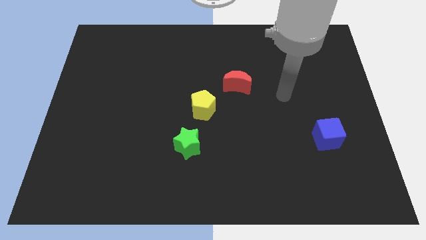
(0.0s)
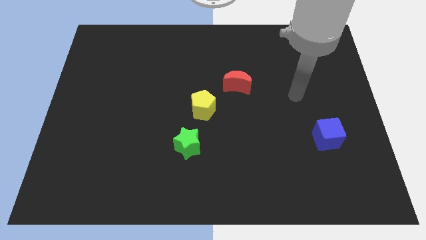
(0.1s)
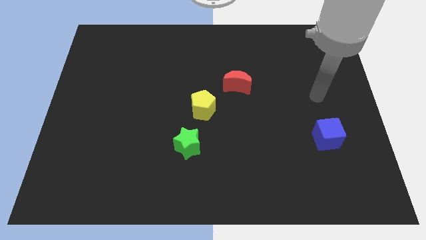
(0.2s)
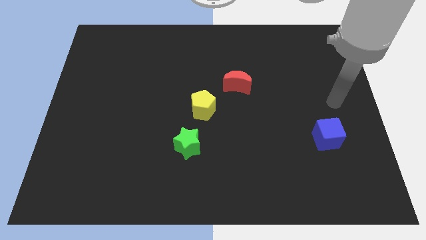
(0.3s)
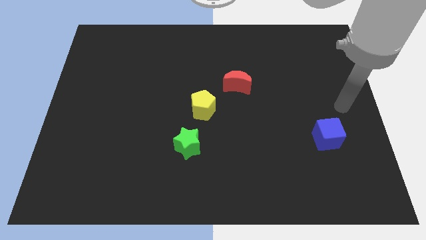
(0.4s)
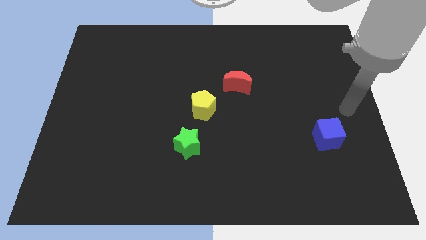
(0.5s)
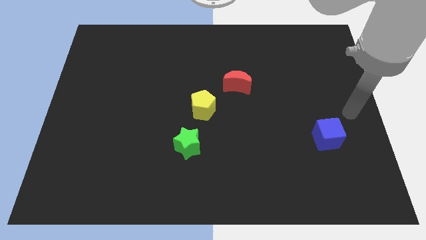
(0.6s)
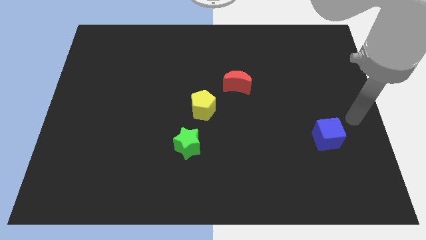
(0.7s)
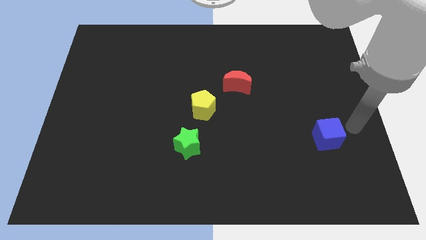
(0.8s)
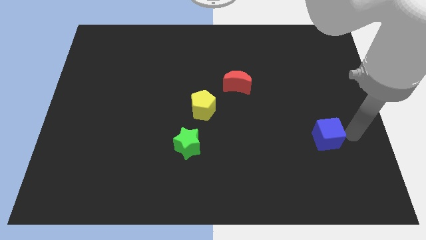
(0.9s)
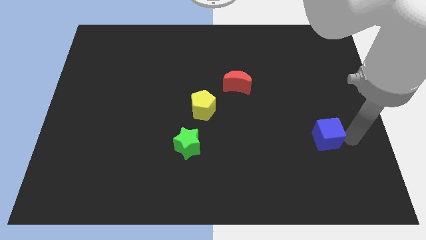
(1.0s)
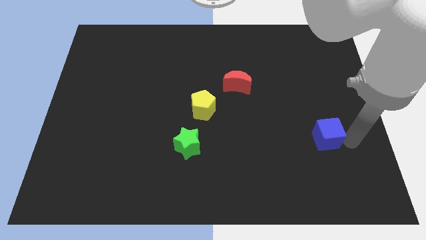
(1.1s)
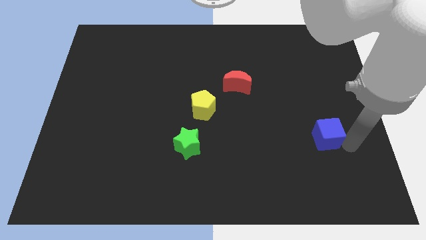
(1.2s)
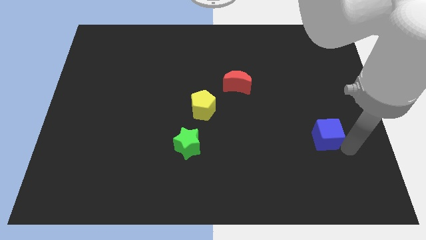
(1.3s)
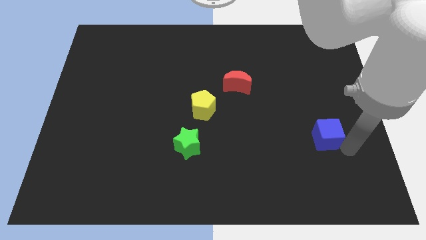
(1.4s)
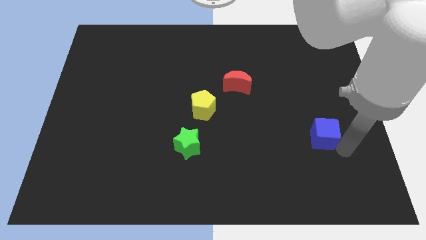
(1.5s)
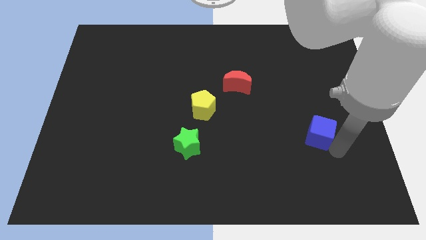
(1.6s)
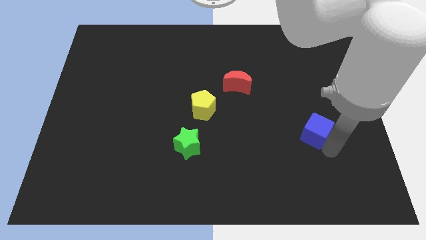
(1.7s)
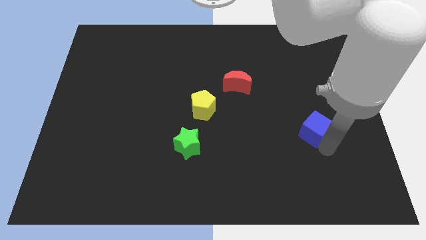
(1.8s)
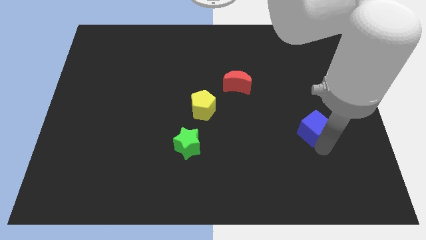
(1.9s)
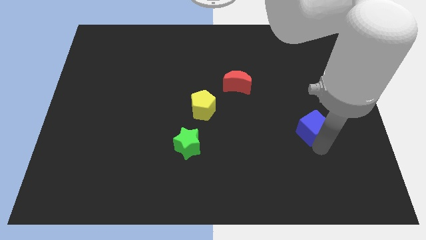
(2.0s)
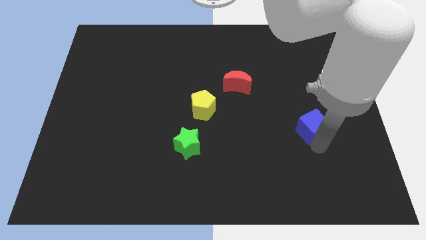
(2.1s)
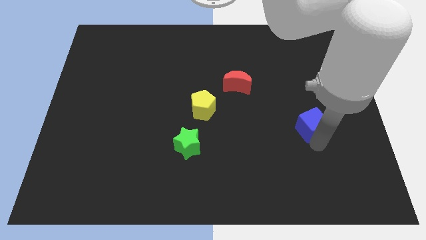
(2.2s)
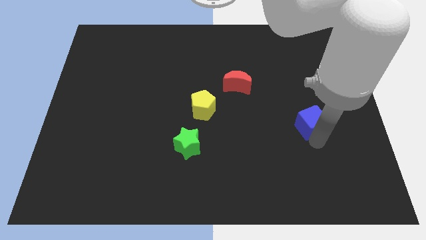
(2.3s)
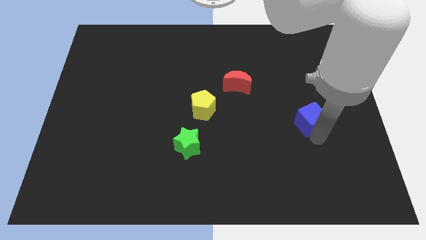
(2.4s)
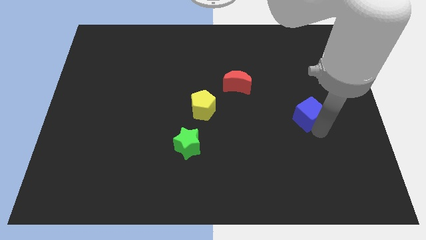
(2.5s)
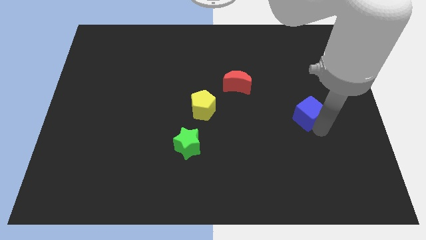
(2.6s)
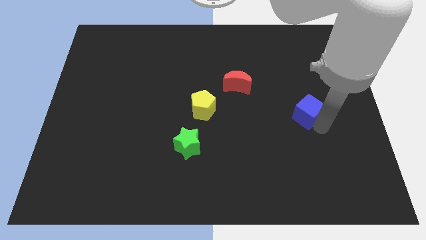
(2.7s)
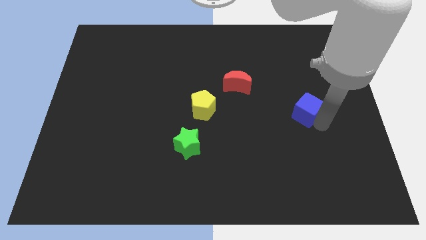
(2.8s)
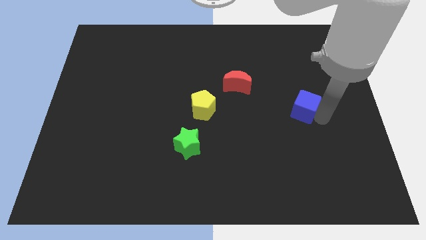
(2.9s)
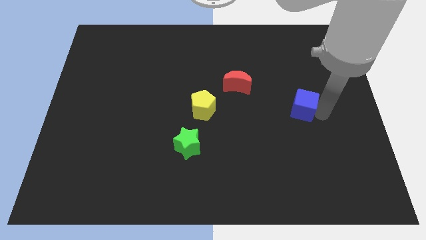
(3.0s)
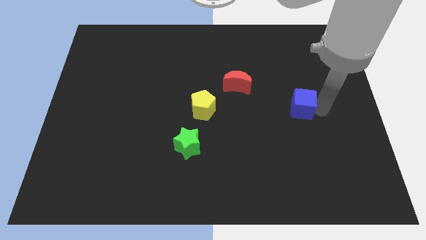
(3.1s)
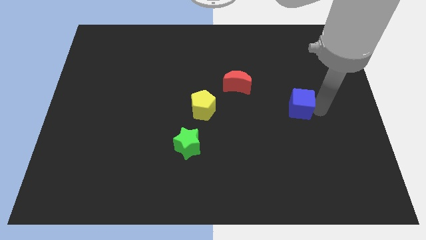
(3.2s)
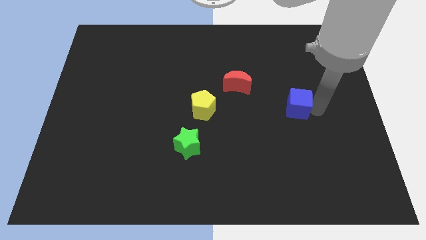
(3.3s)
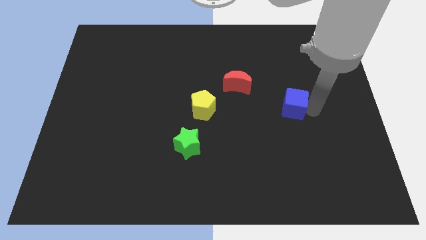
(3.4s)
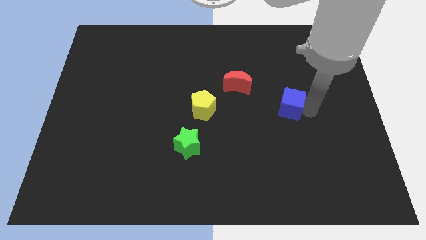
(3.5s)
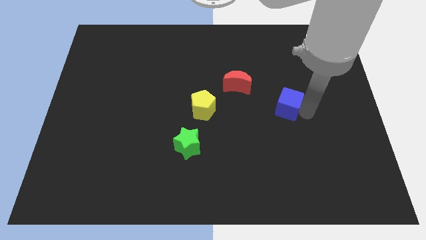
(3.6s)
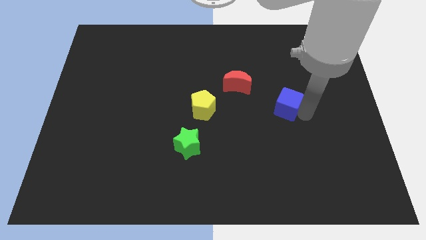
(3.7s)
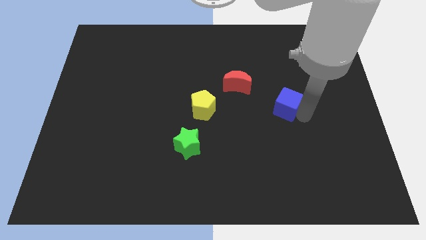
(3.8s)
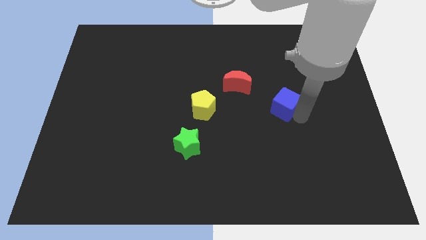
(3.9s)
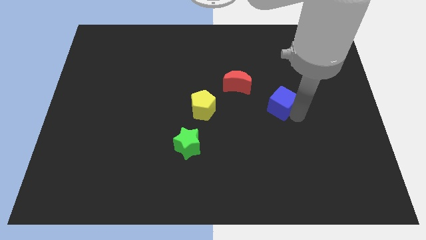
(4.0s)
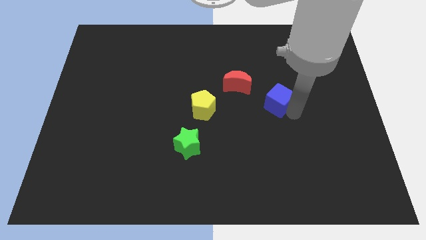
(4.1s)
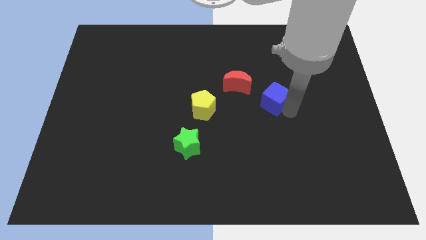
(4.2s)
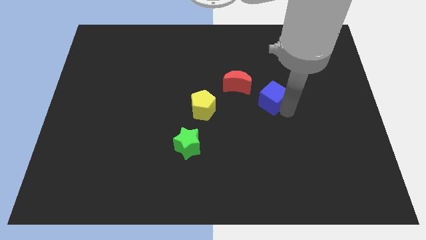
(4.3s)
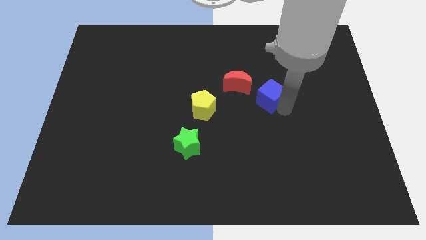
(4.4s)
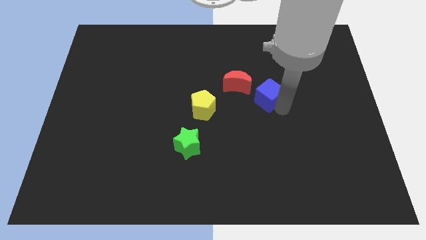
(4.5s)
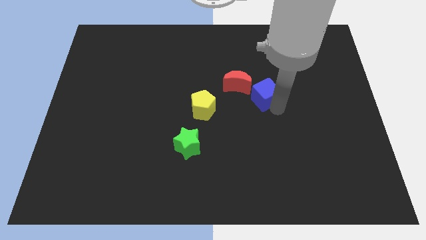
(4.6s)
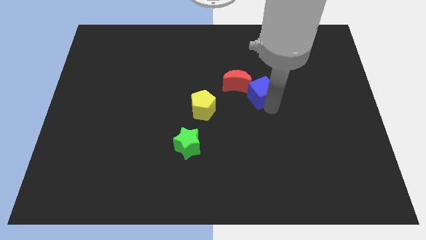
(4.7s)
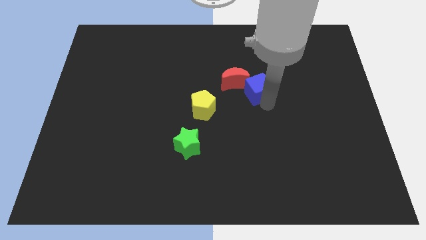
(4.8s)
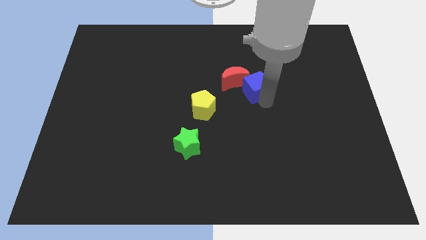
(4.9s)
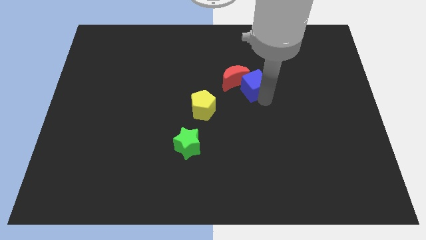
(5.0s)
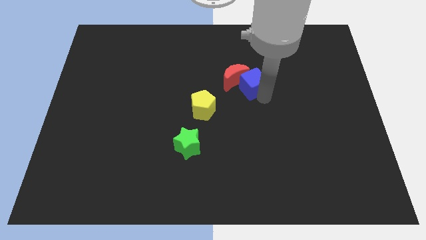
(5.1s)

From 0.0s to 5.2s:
move the cube towards the red moon

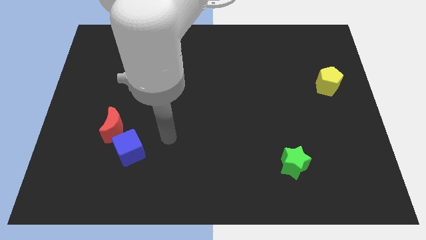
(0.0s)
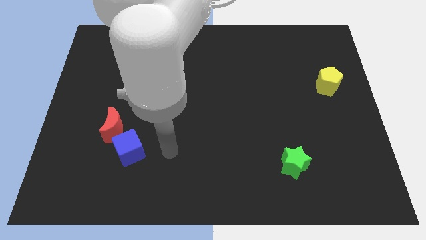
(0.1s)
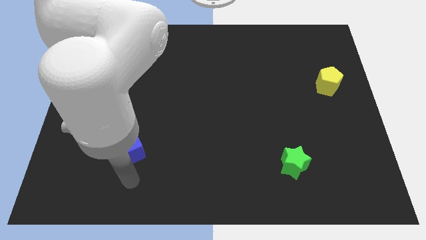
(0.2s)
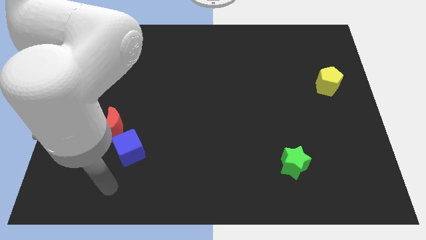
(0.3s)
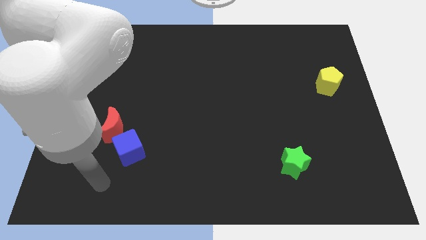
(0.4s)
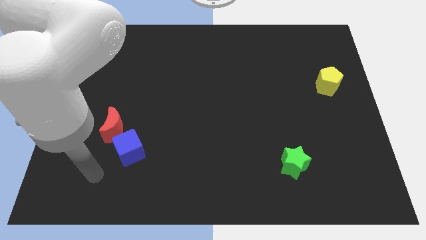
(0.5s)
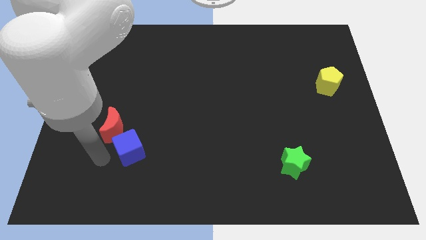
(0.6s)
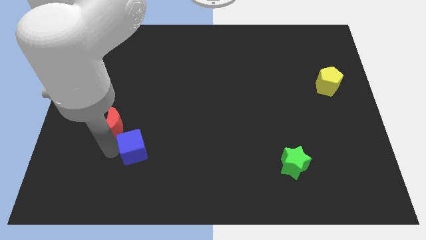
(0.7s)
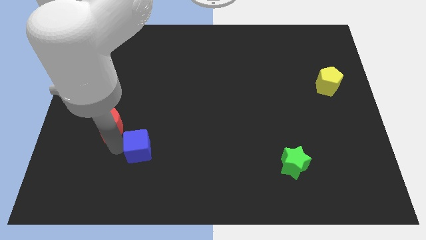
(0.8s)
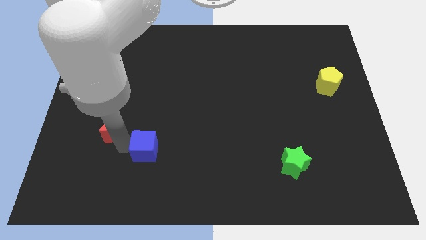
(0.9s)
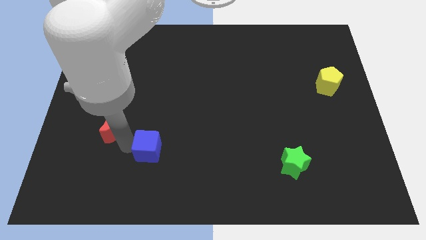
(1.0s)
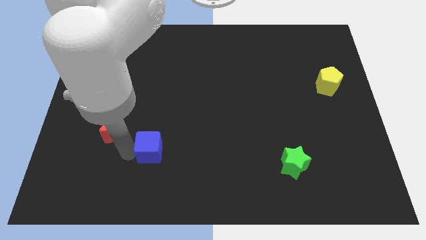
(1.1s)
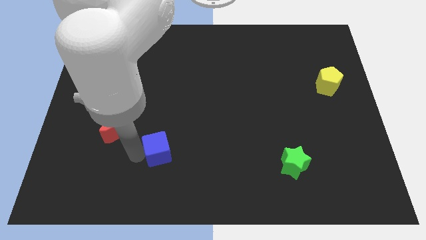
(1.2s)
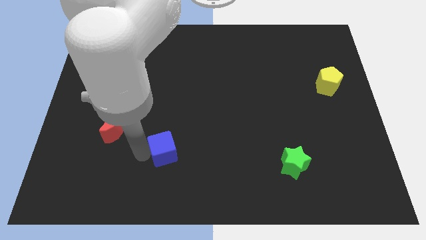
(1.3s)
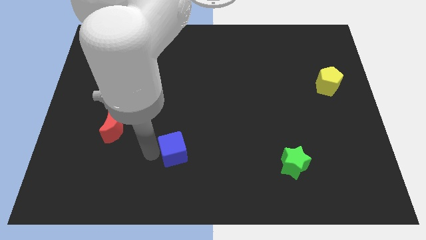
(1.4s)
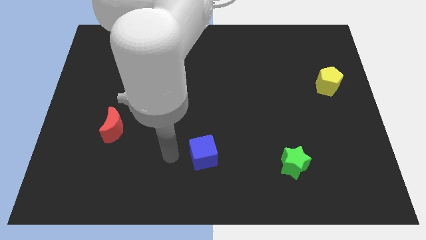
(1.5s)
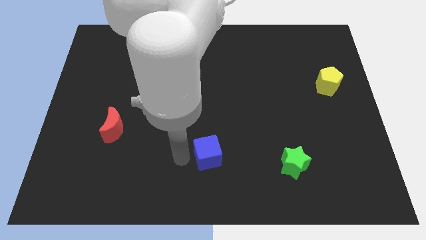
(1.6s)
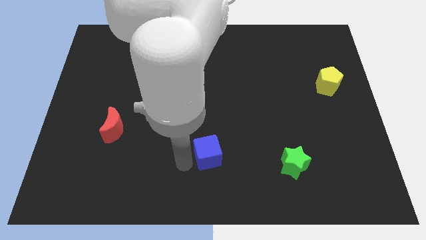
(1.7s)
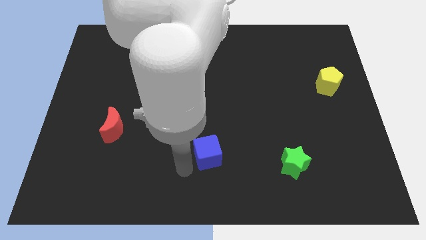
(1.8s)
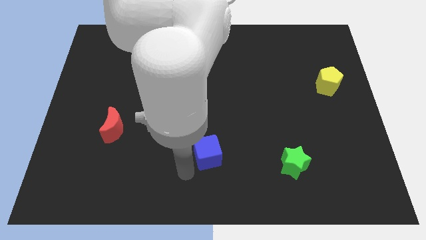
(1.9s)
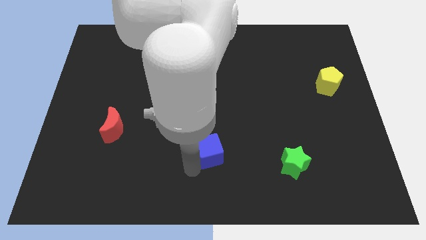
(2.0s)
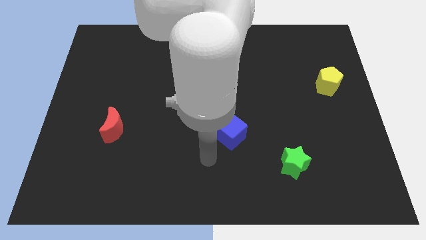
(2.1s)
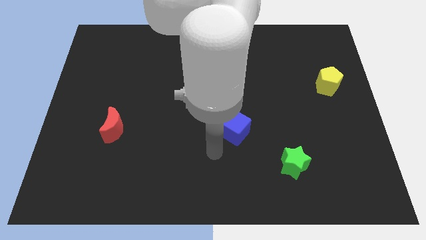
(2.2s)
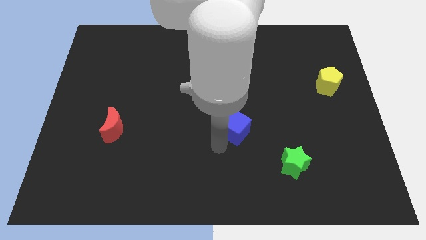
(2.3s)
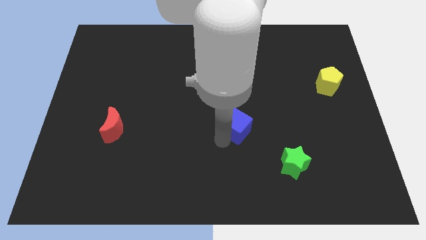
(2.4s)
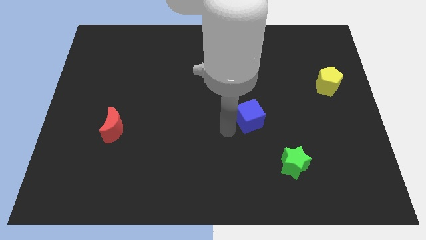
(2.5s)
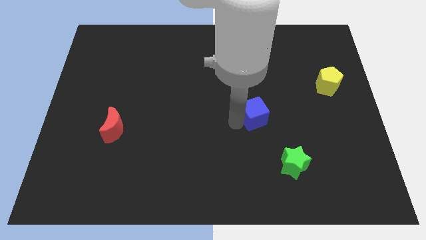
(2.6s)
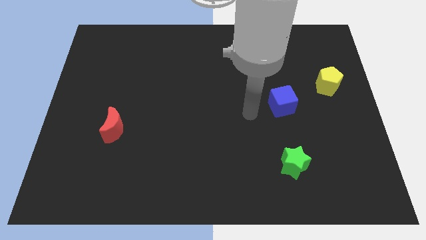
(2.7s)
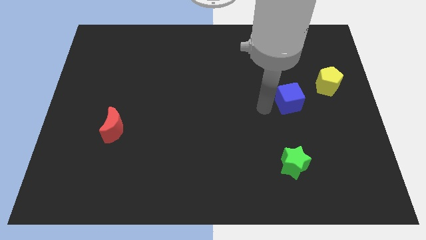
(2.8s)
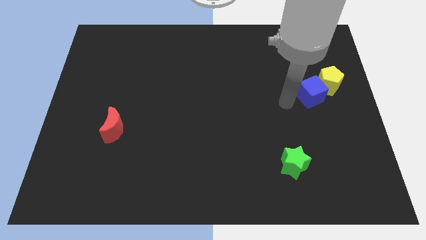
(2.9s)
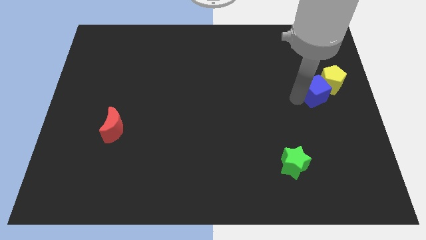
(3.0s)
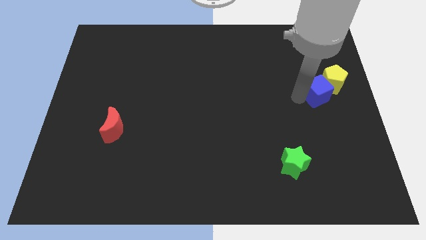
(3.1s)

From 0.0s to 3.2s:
put the cube next to the yellow pentagon

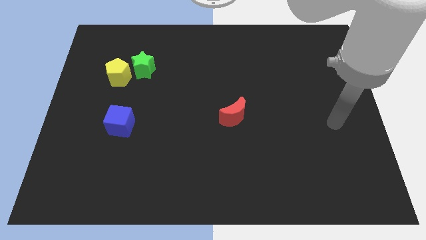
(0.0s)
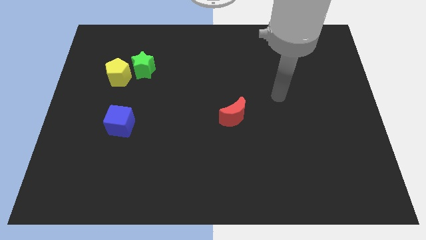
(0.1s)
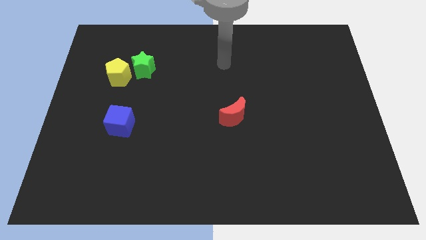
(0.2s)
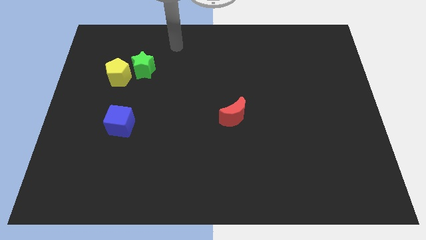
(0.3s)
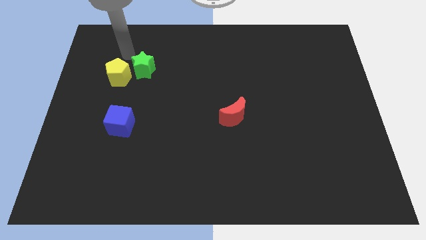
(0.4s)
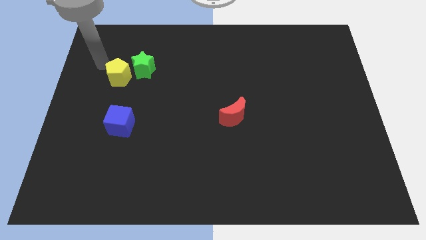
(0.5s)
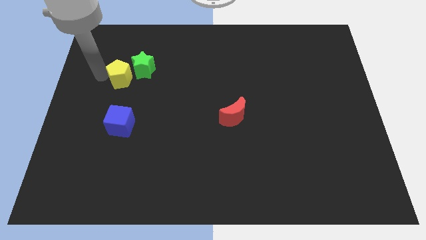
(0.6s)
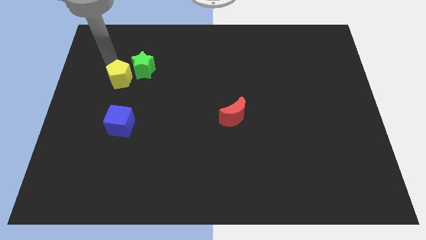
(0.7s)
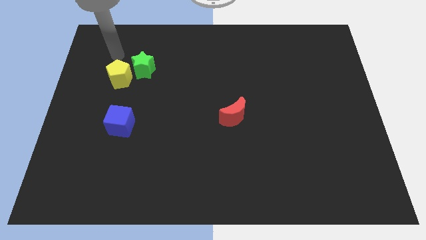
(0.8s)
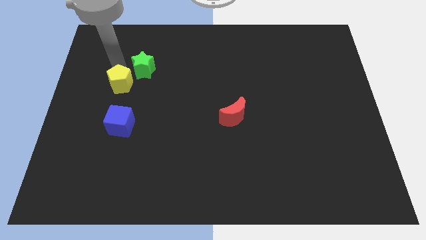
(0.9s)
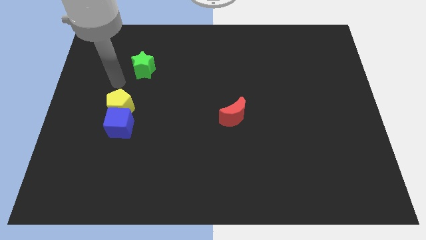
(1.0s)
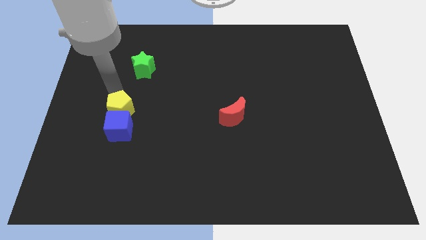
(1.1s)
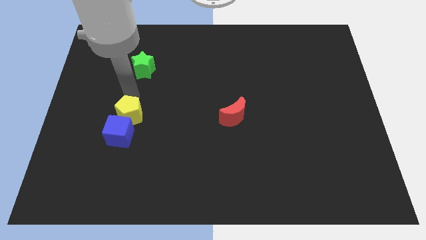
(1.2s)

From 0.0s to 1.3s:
put the pentagon to the blue block
